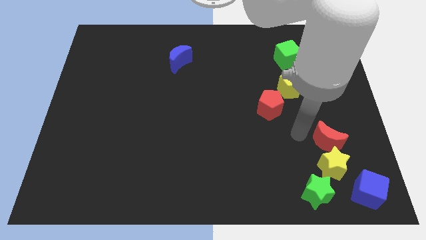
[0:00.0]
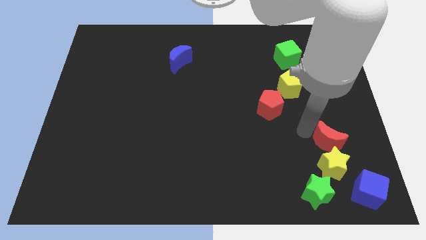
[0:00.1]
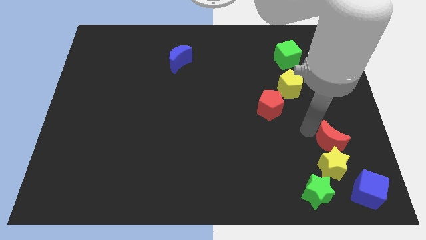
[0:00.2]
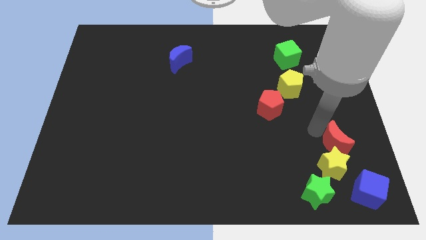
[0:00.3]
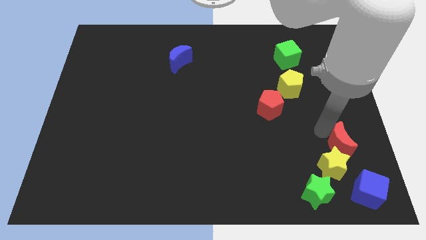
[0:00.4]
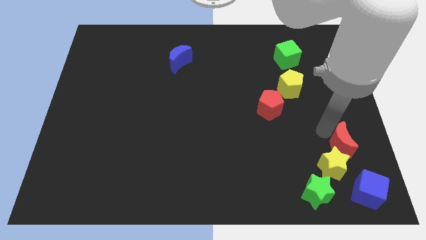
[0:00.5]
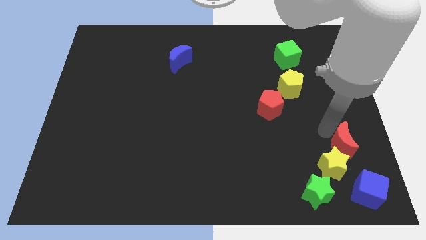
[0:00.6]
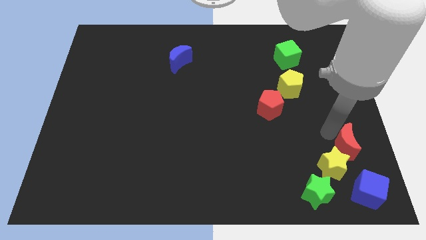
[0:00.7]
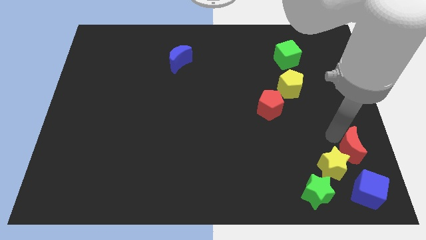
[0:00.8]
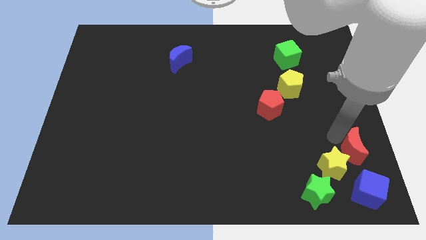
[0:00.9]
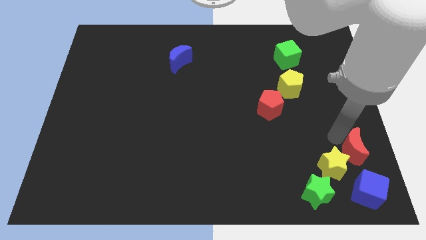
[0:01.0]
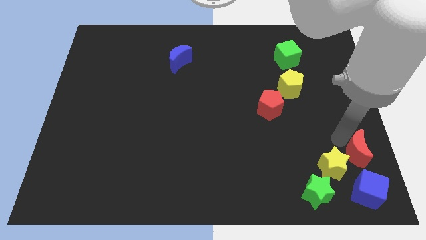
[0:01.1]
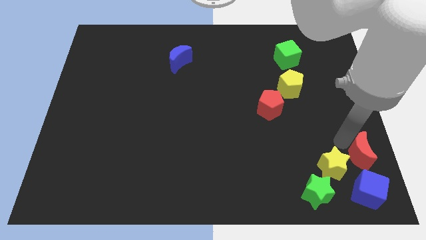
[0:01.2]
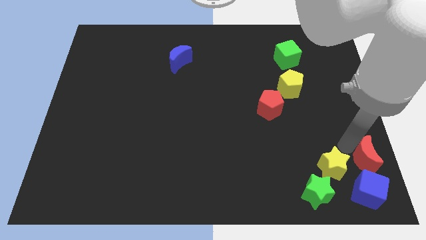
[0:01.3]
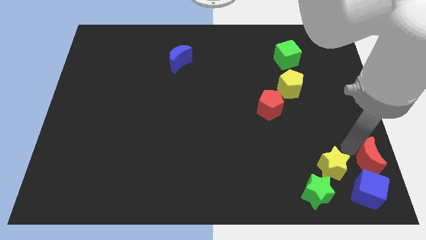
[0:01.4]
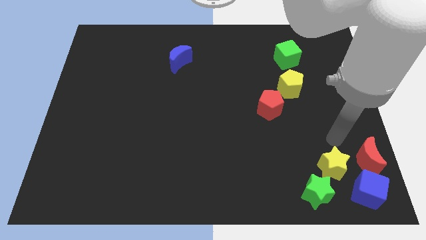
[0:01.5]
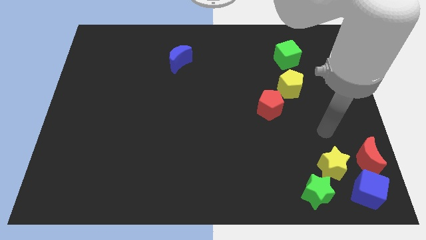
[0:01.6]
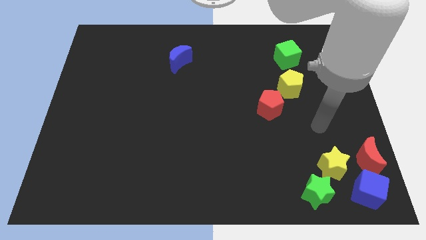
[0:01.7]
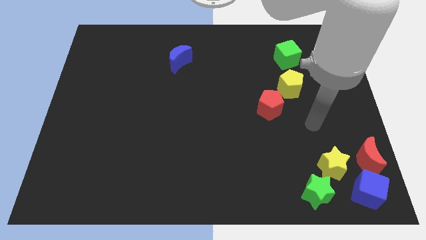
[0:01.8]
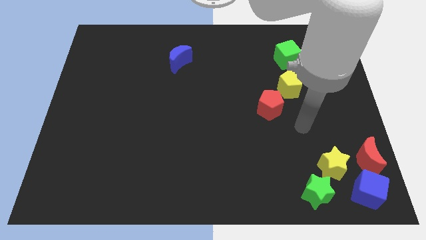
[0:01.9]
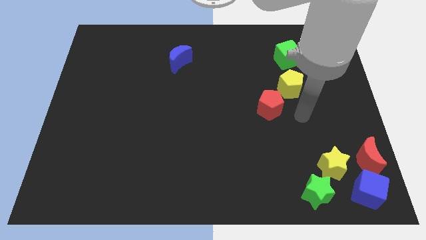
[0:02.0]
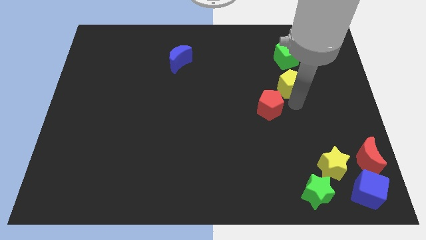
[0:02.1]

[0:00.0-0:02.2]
place the red crescent above the blue cube

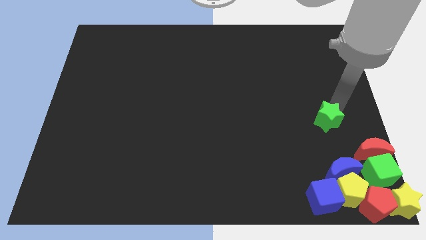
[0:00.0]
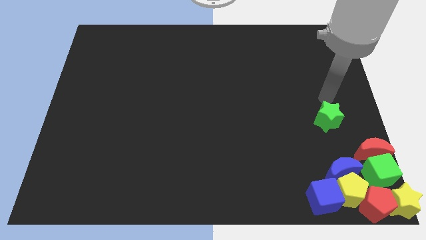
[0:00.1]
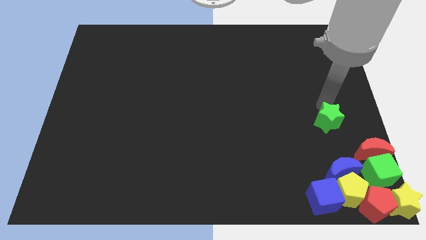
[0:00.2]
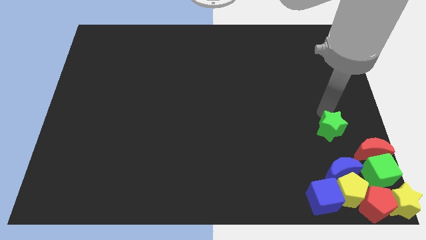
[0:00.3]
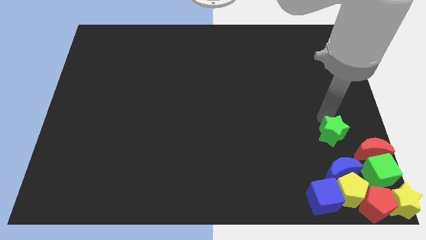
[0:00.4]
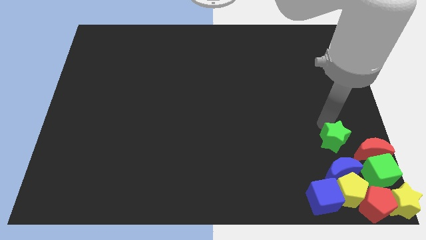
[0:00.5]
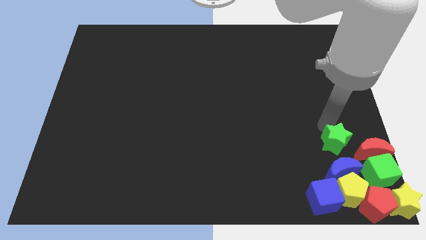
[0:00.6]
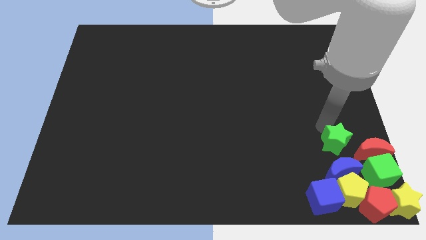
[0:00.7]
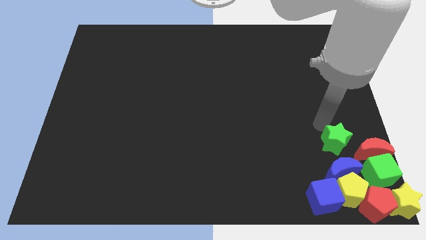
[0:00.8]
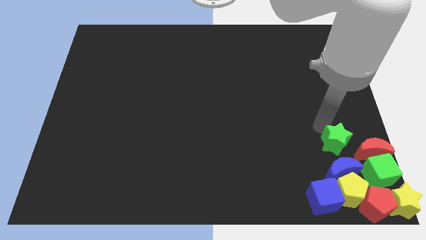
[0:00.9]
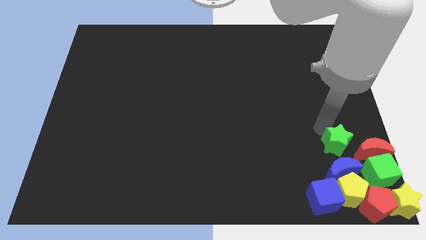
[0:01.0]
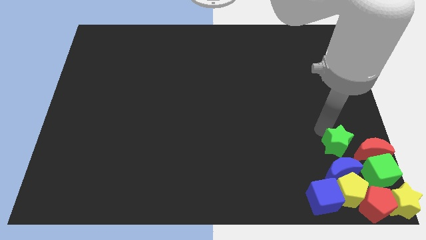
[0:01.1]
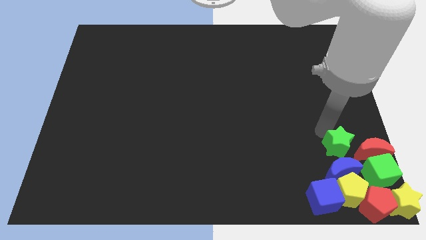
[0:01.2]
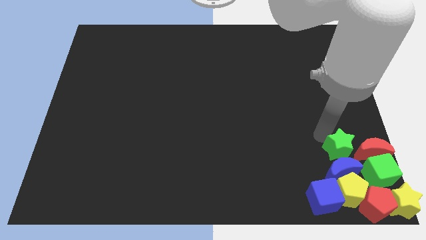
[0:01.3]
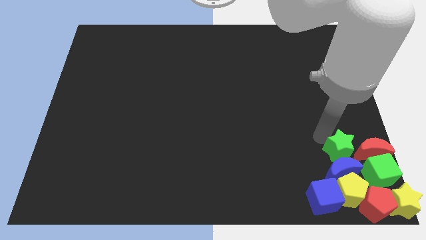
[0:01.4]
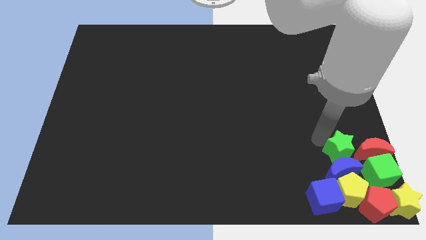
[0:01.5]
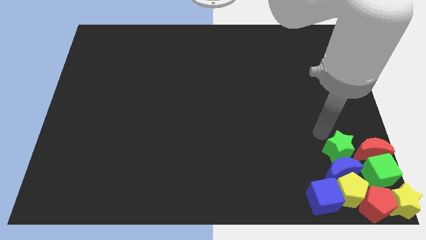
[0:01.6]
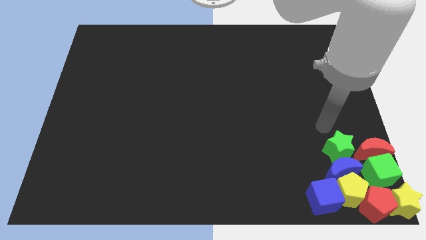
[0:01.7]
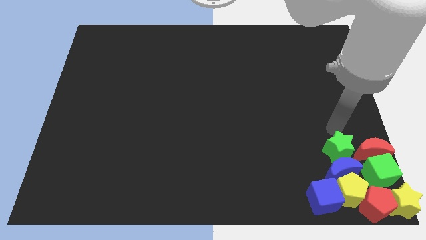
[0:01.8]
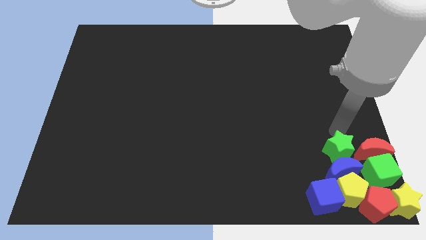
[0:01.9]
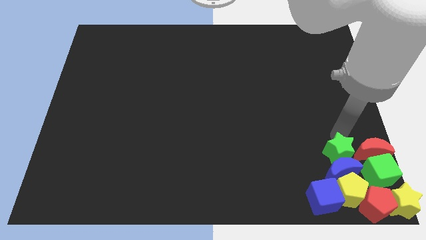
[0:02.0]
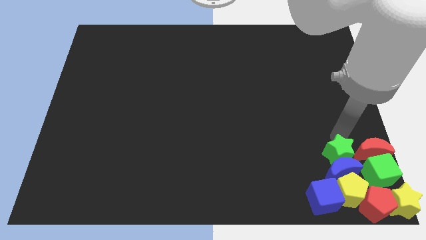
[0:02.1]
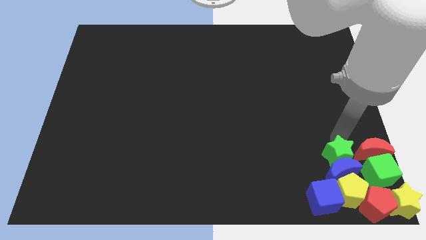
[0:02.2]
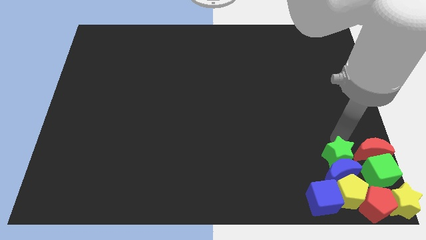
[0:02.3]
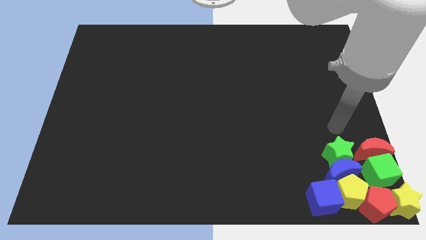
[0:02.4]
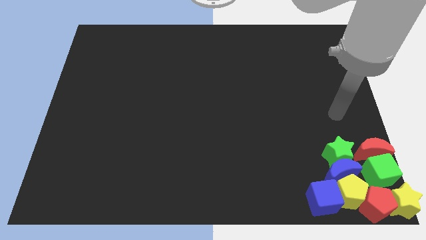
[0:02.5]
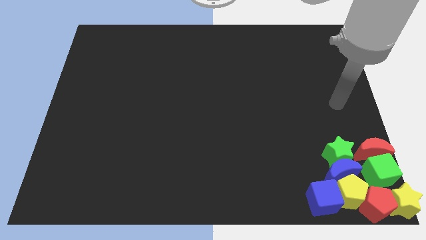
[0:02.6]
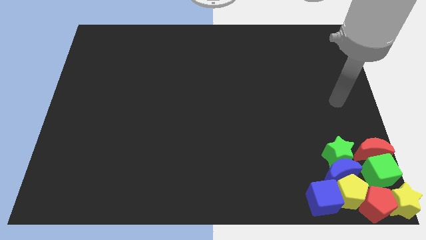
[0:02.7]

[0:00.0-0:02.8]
push green star towards the group of blocks

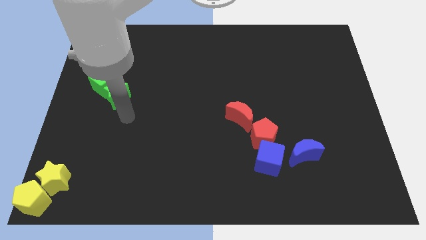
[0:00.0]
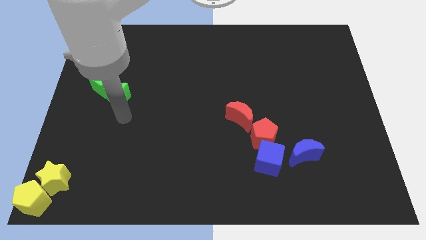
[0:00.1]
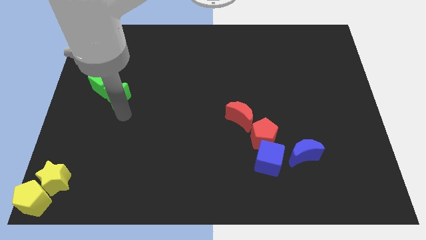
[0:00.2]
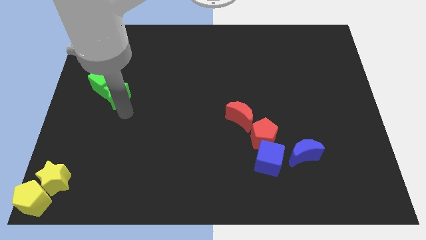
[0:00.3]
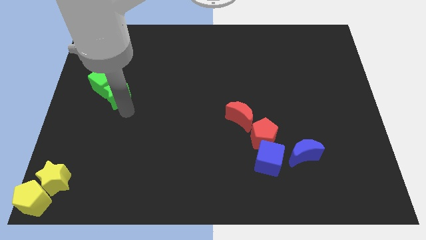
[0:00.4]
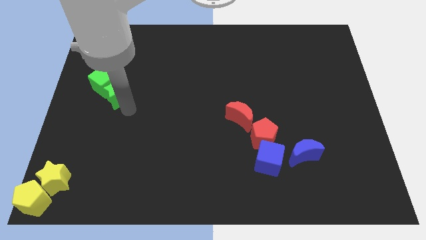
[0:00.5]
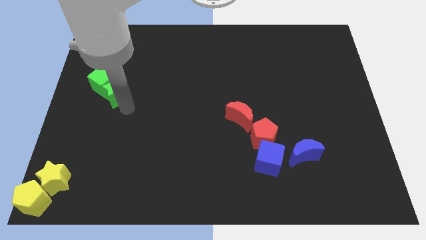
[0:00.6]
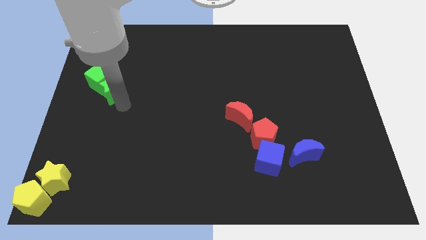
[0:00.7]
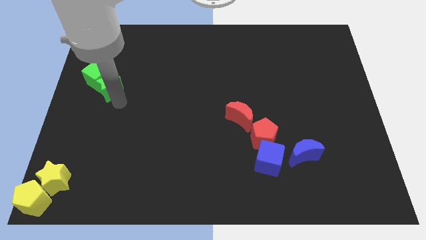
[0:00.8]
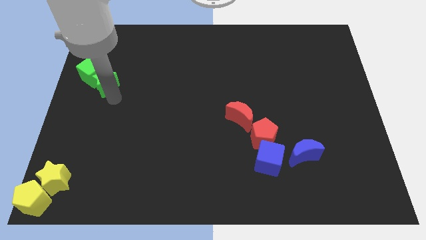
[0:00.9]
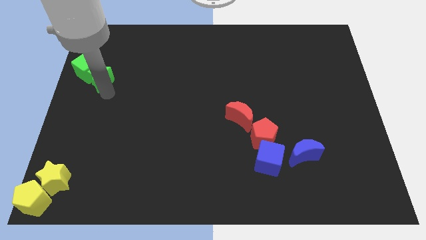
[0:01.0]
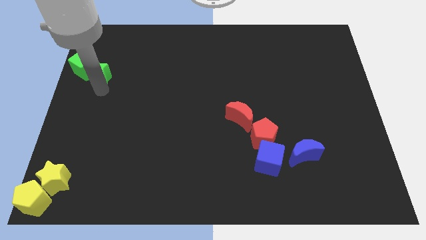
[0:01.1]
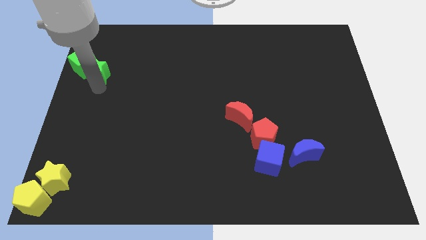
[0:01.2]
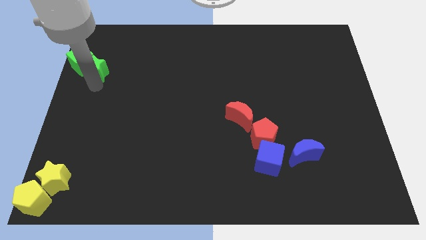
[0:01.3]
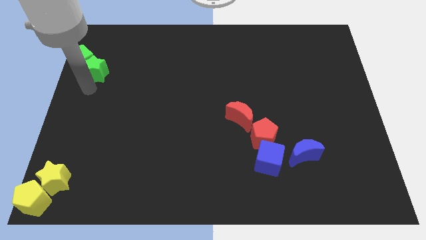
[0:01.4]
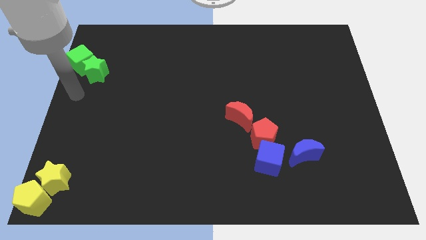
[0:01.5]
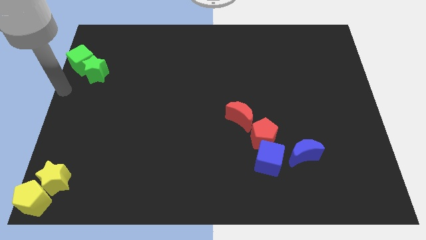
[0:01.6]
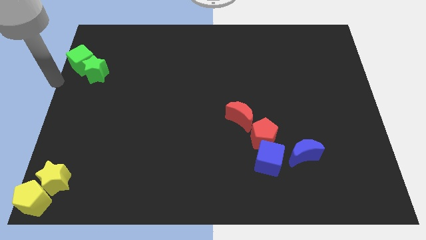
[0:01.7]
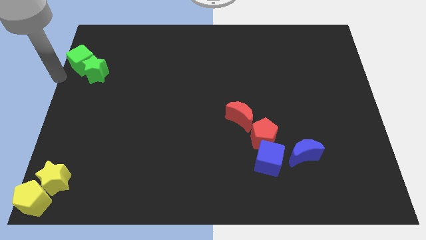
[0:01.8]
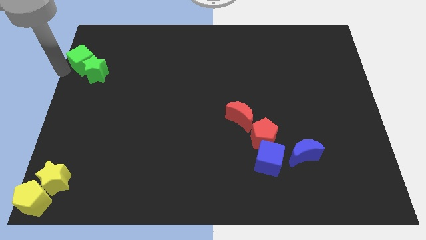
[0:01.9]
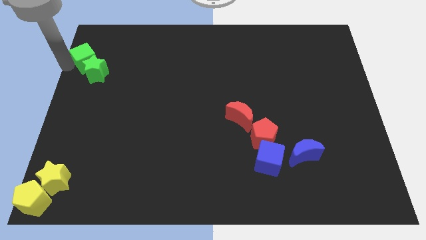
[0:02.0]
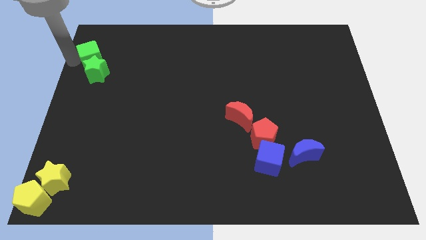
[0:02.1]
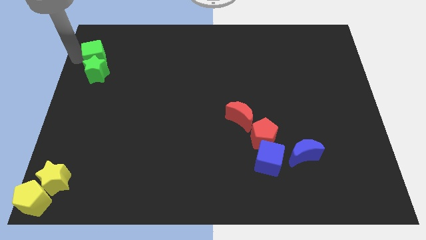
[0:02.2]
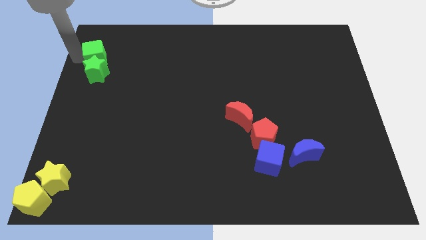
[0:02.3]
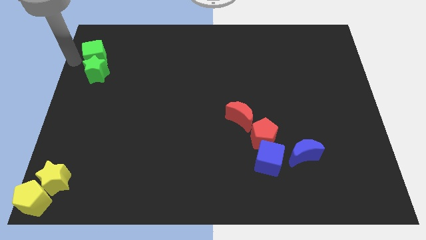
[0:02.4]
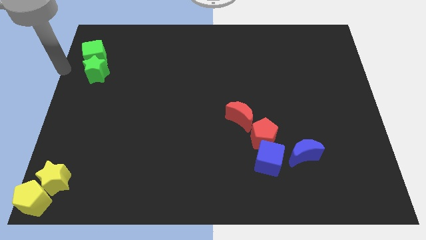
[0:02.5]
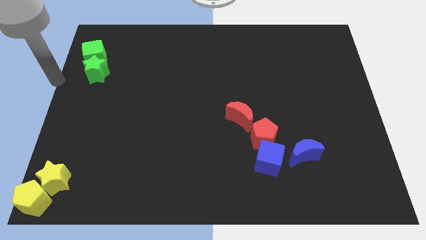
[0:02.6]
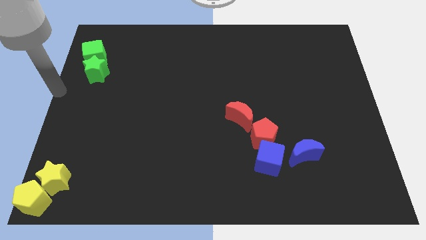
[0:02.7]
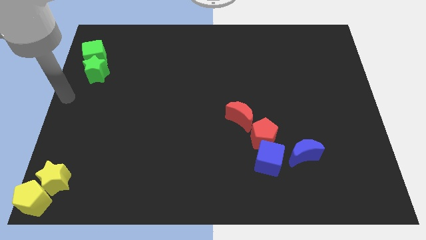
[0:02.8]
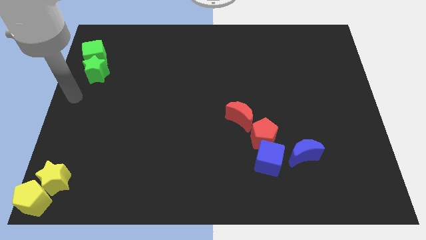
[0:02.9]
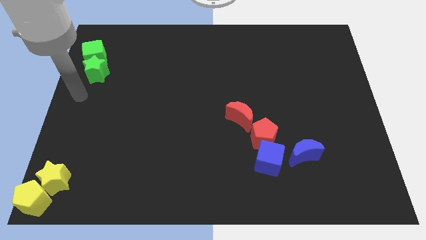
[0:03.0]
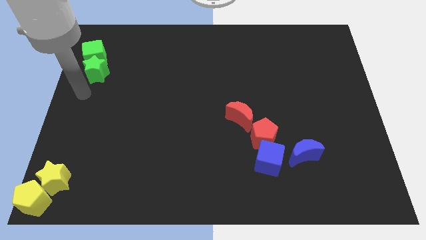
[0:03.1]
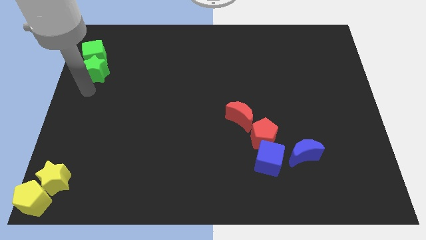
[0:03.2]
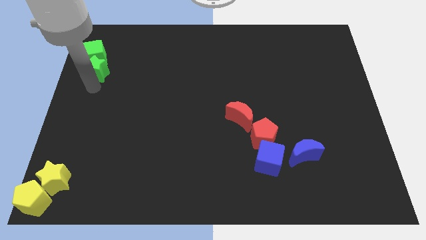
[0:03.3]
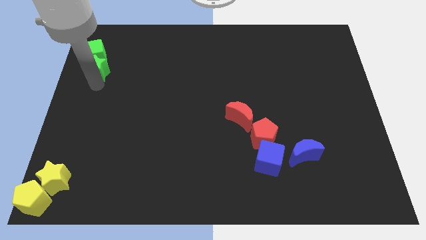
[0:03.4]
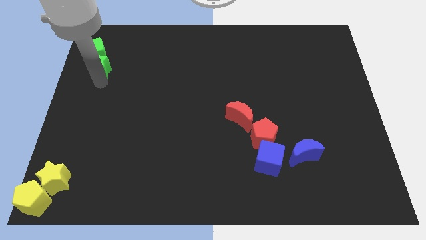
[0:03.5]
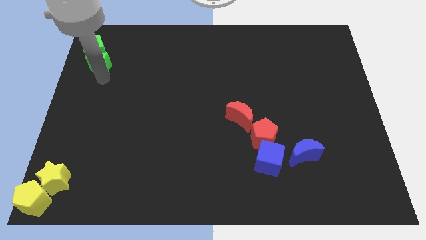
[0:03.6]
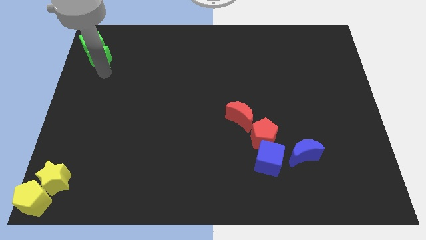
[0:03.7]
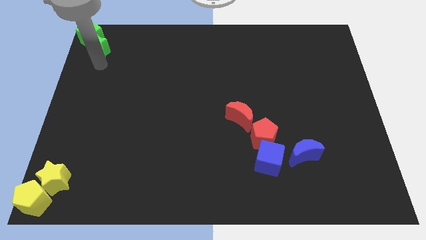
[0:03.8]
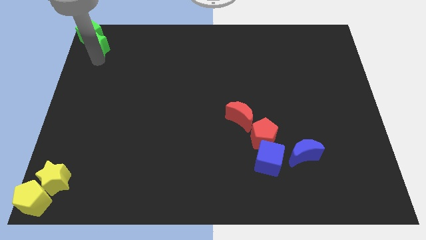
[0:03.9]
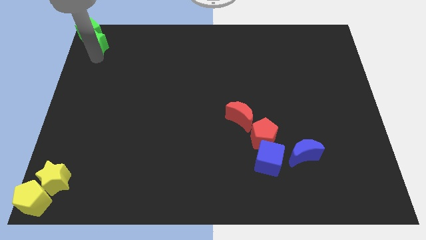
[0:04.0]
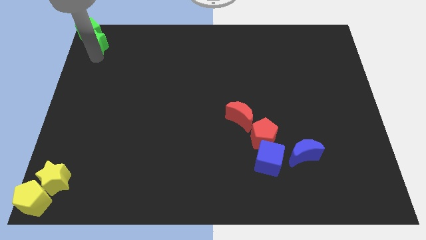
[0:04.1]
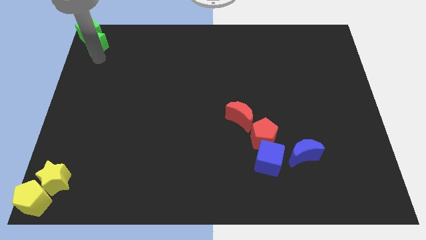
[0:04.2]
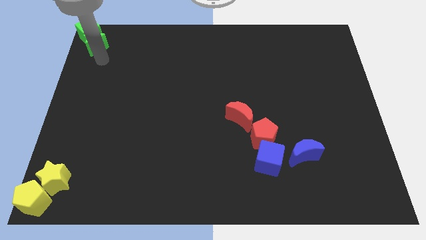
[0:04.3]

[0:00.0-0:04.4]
move the green blocks to the top left corner of the board
